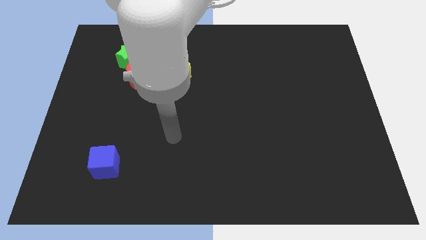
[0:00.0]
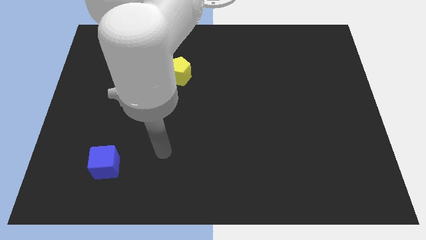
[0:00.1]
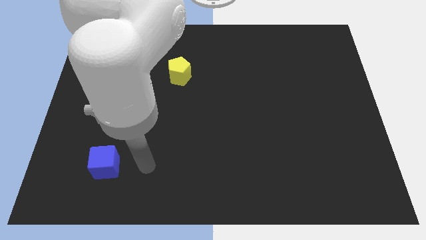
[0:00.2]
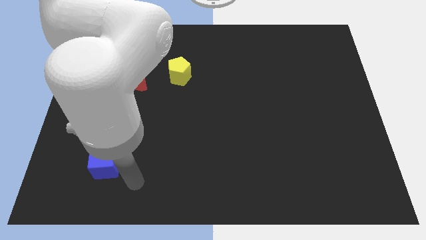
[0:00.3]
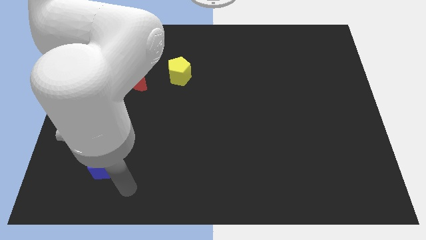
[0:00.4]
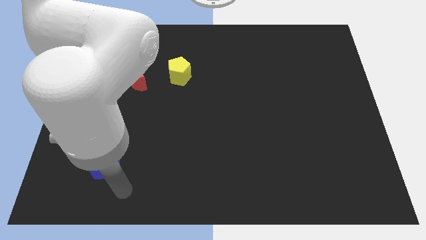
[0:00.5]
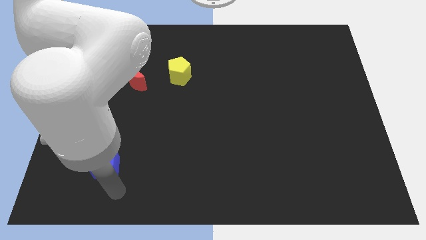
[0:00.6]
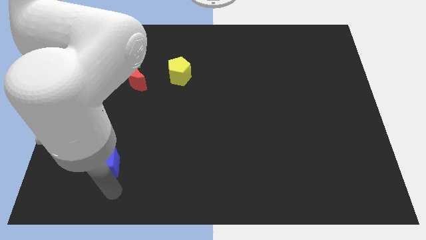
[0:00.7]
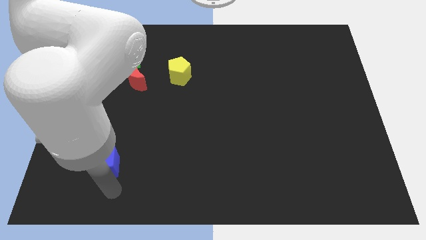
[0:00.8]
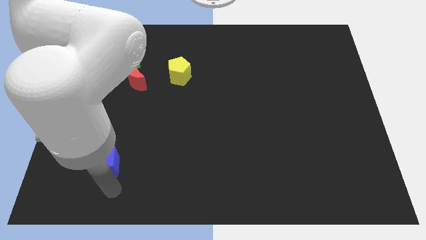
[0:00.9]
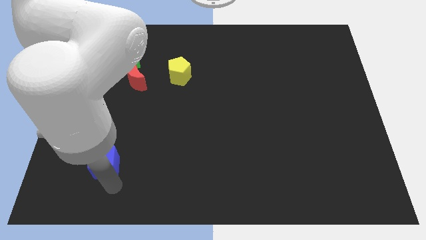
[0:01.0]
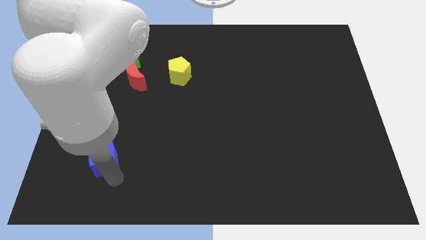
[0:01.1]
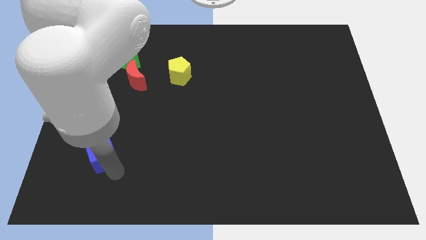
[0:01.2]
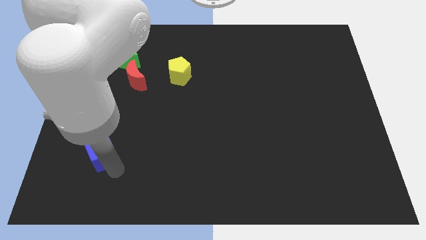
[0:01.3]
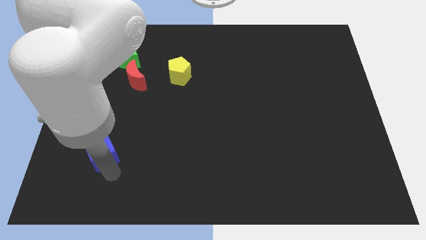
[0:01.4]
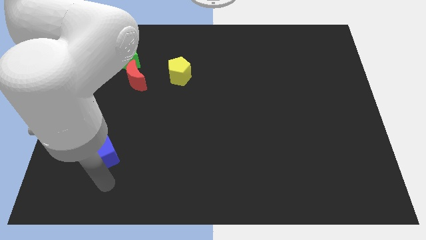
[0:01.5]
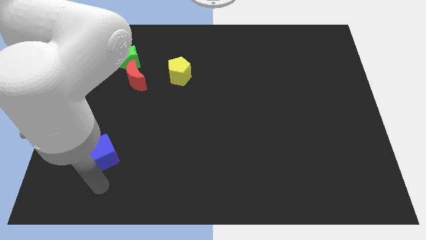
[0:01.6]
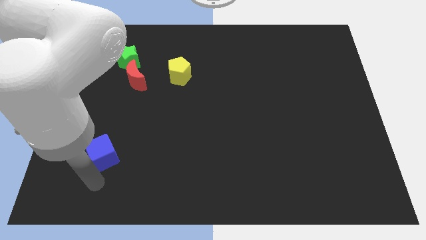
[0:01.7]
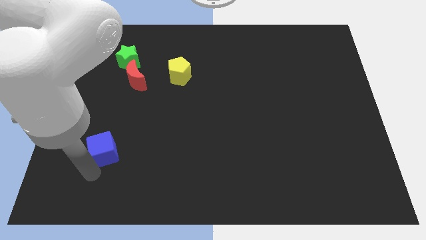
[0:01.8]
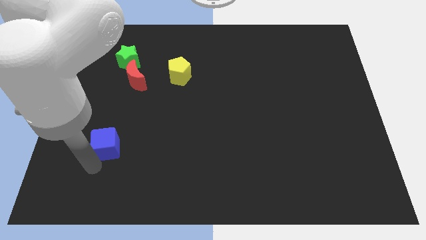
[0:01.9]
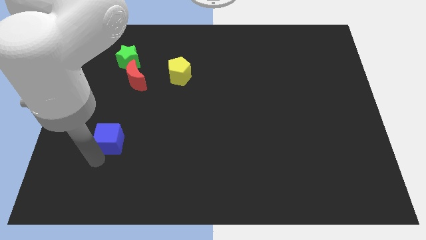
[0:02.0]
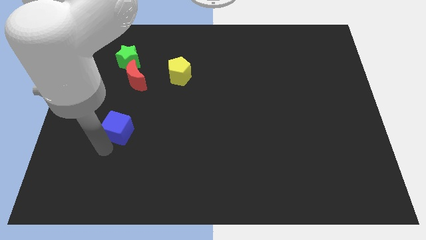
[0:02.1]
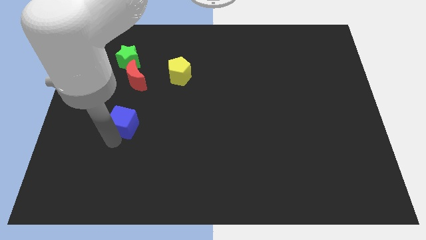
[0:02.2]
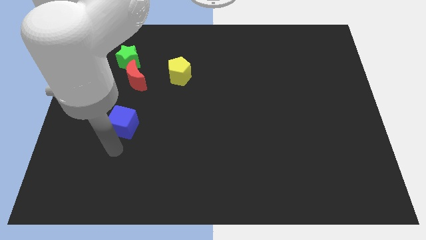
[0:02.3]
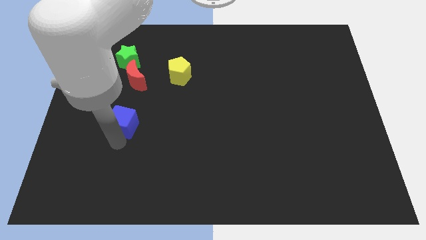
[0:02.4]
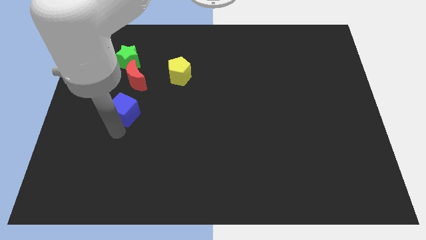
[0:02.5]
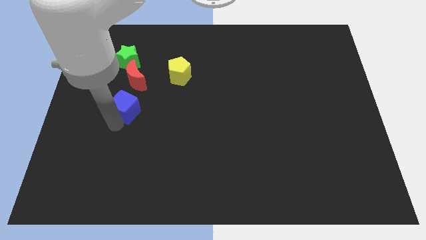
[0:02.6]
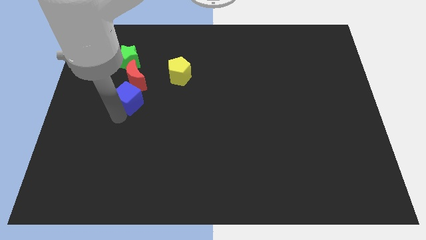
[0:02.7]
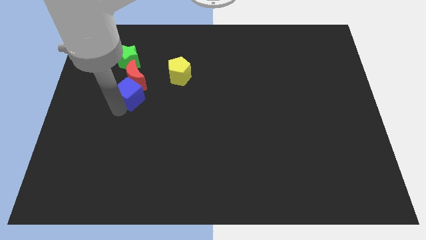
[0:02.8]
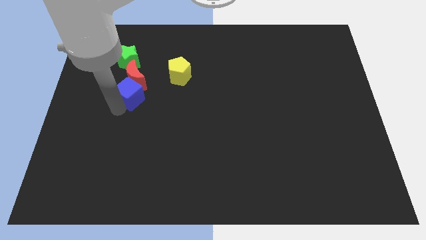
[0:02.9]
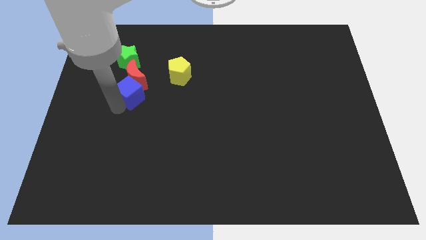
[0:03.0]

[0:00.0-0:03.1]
push the blue block next to the red block

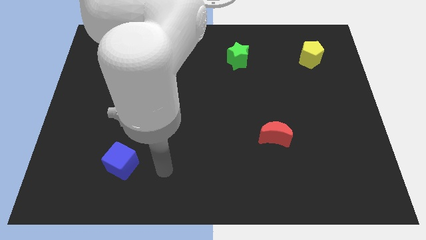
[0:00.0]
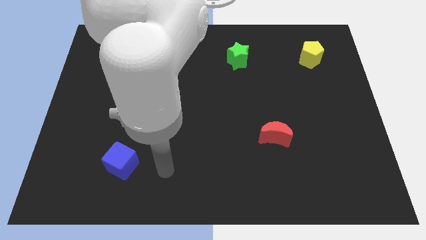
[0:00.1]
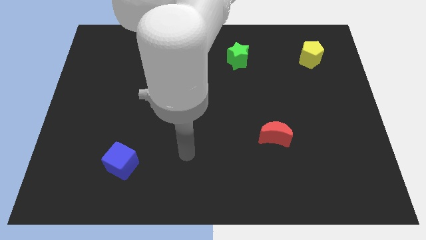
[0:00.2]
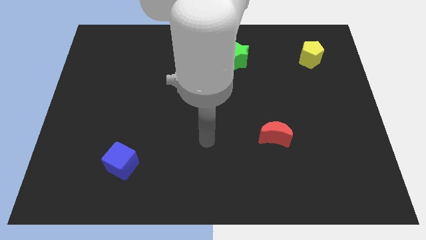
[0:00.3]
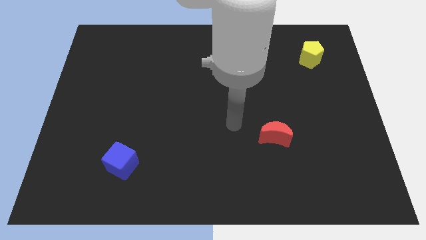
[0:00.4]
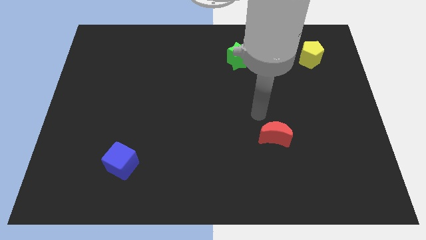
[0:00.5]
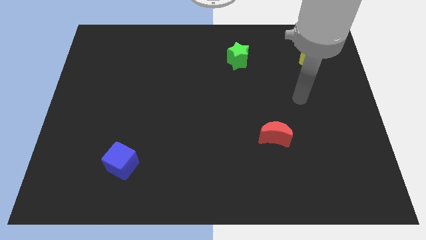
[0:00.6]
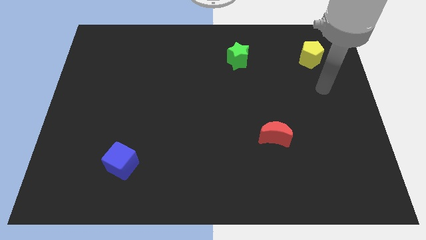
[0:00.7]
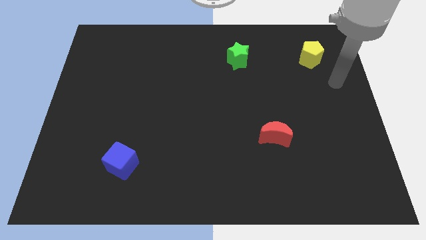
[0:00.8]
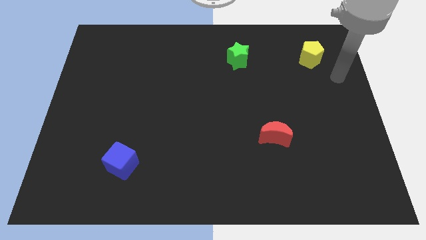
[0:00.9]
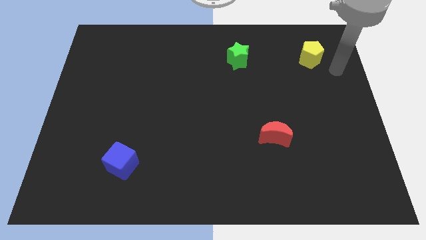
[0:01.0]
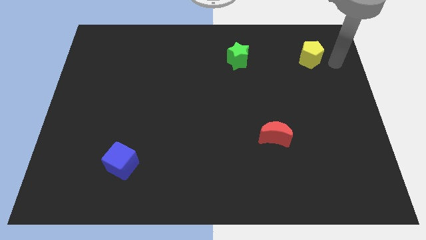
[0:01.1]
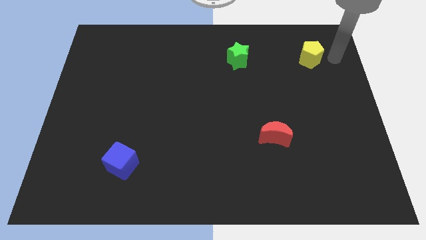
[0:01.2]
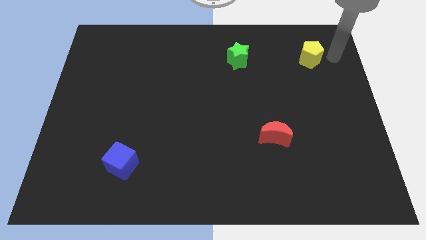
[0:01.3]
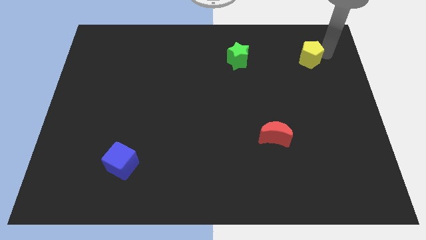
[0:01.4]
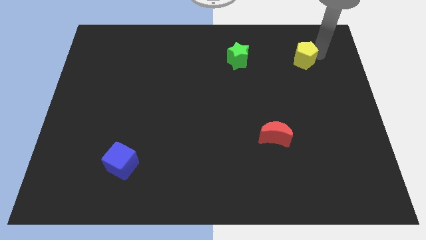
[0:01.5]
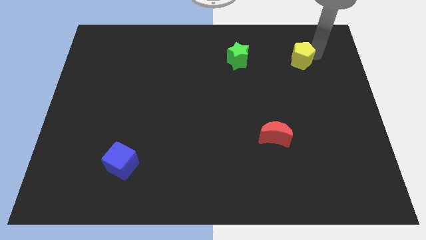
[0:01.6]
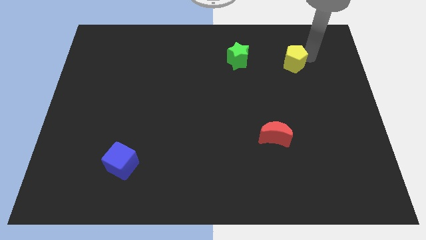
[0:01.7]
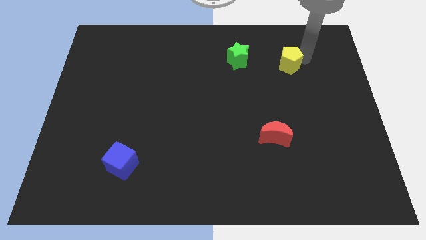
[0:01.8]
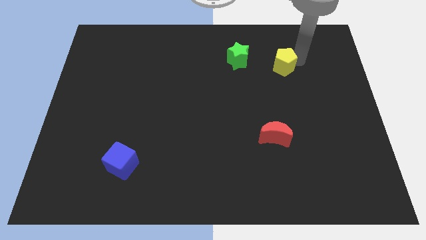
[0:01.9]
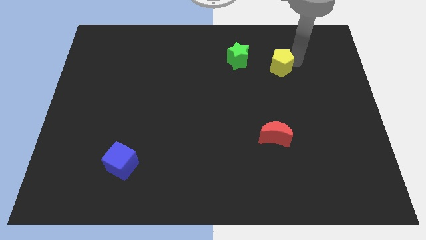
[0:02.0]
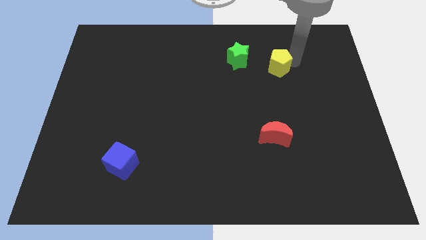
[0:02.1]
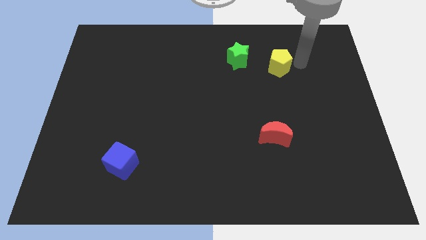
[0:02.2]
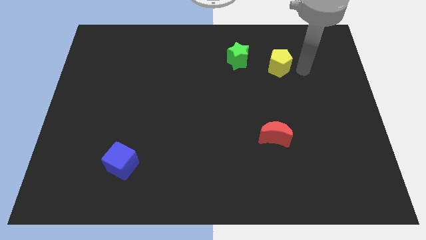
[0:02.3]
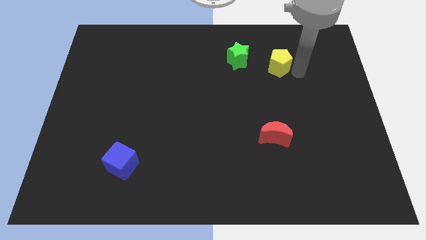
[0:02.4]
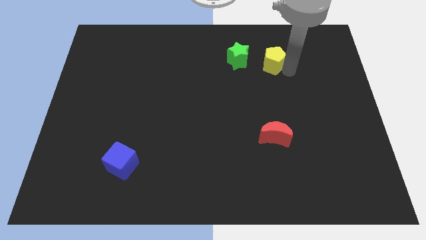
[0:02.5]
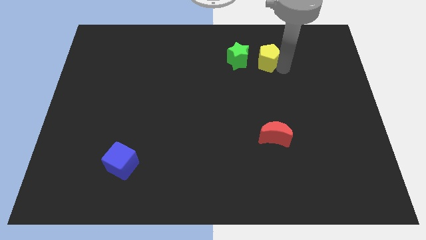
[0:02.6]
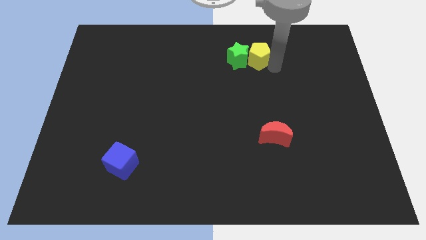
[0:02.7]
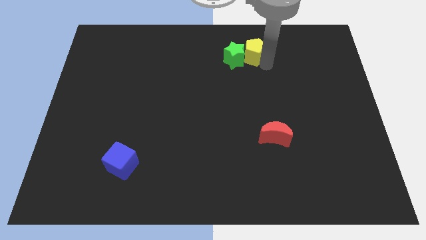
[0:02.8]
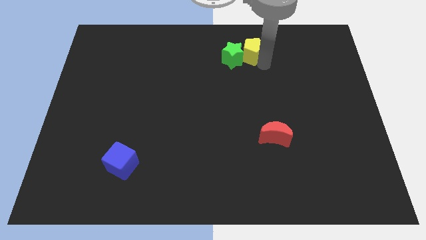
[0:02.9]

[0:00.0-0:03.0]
move the yellow block next to the green star

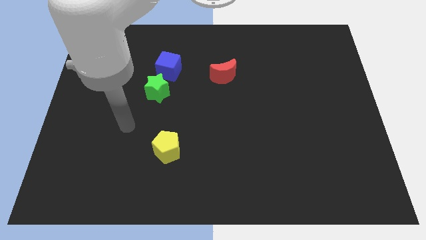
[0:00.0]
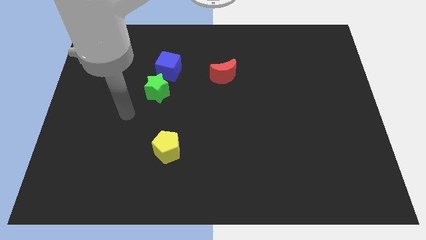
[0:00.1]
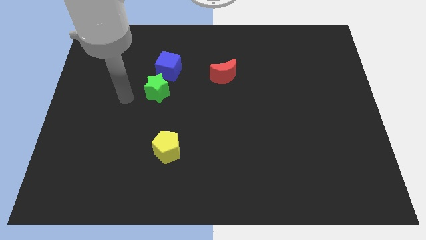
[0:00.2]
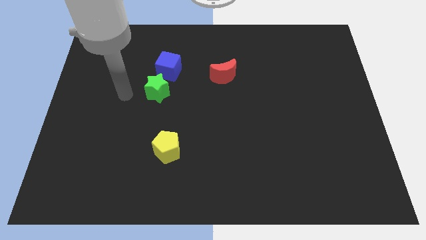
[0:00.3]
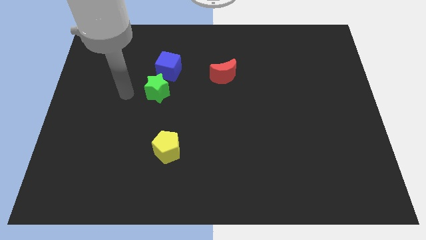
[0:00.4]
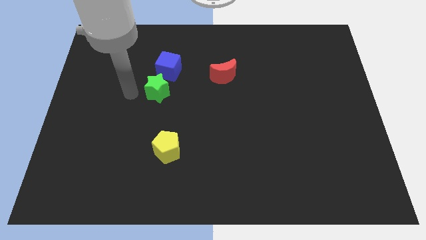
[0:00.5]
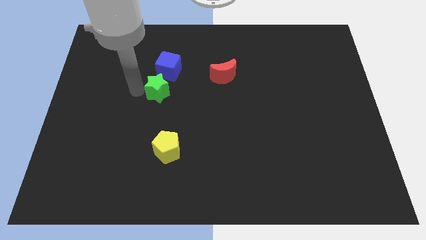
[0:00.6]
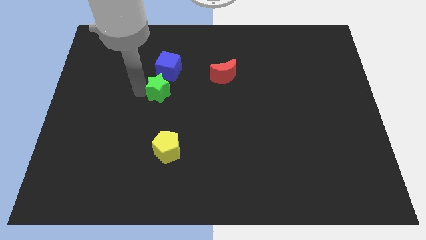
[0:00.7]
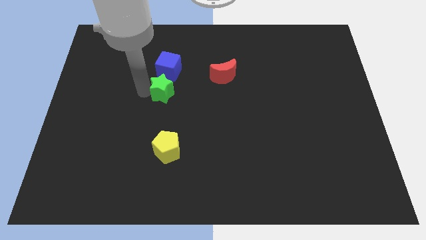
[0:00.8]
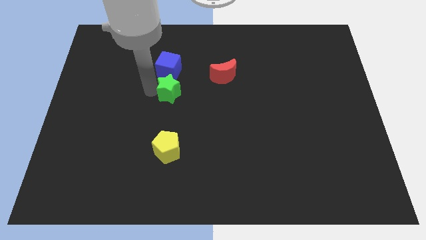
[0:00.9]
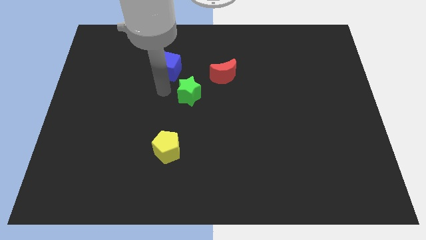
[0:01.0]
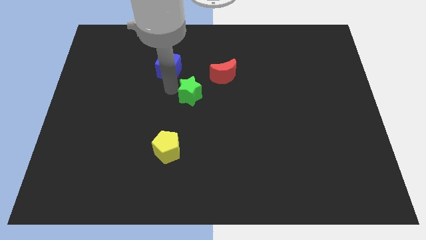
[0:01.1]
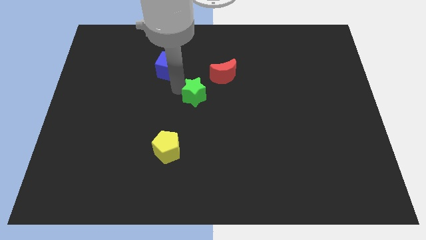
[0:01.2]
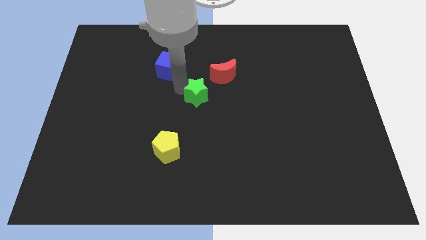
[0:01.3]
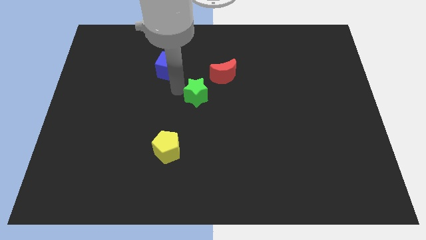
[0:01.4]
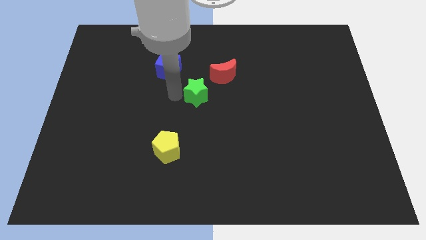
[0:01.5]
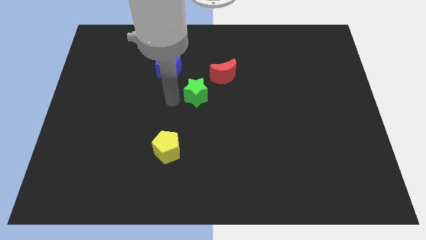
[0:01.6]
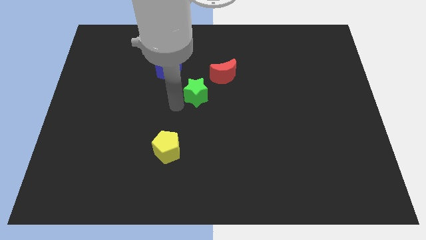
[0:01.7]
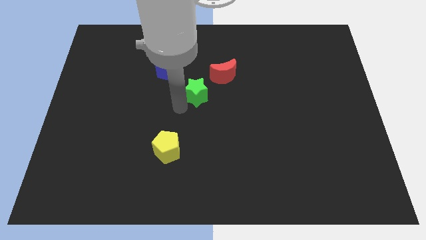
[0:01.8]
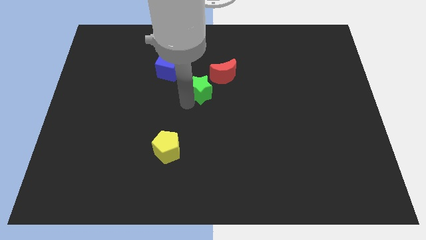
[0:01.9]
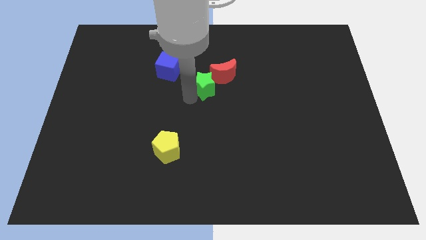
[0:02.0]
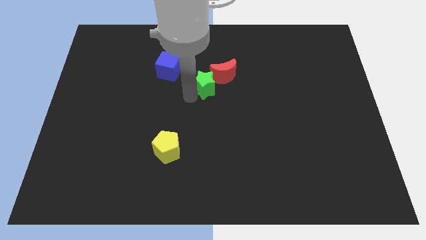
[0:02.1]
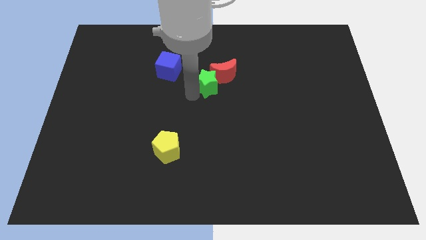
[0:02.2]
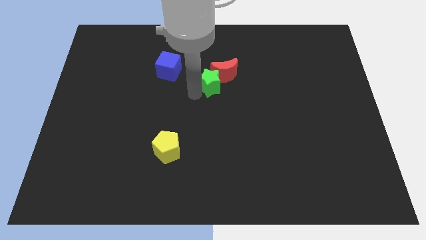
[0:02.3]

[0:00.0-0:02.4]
move the green block towards the moon
